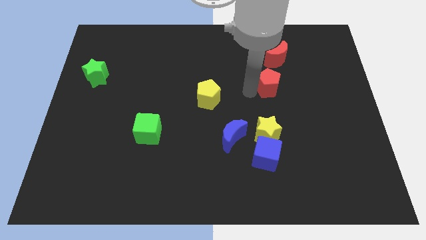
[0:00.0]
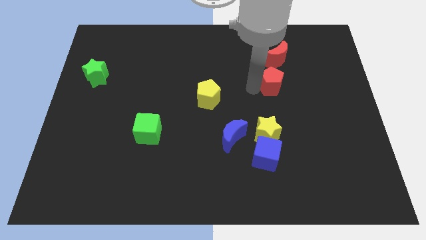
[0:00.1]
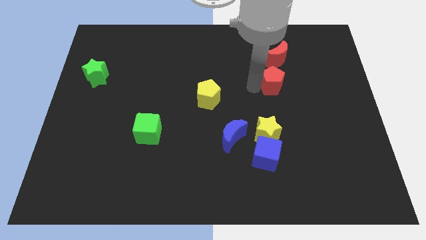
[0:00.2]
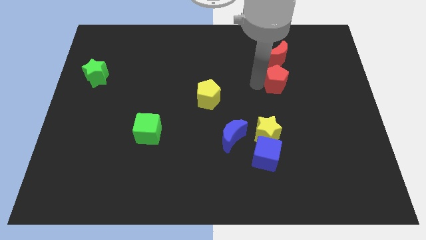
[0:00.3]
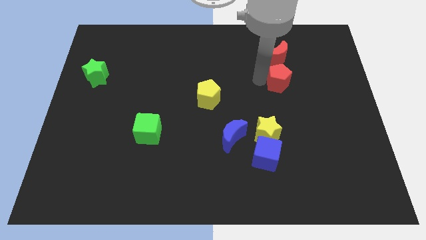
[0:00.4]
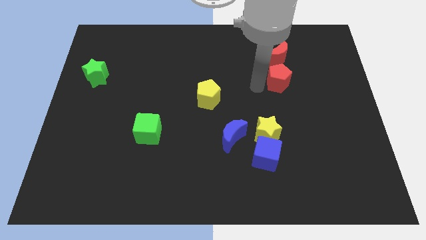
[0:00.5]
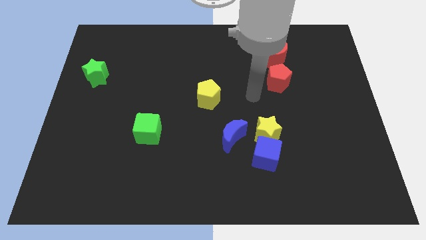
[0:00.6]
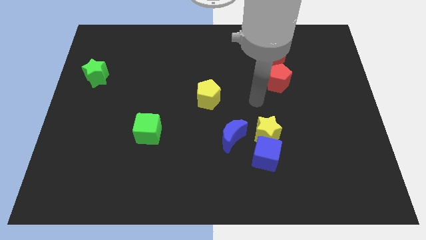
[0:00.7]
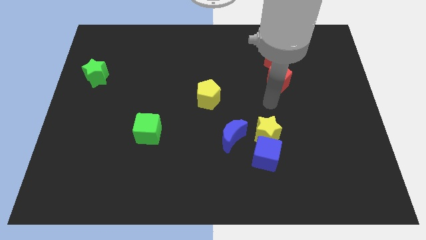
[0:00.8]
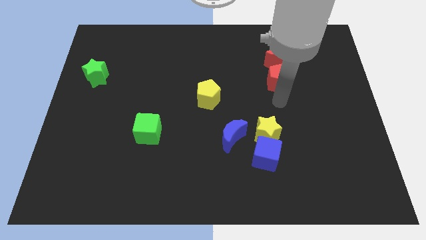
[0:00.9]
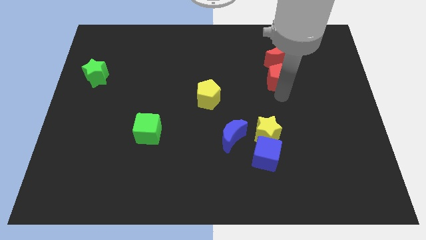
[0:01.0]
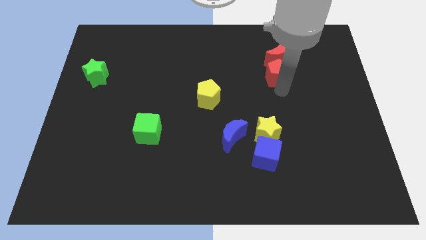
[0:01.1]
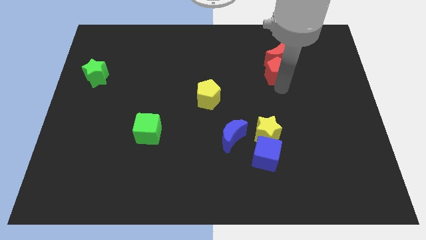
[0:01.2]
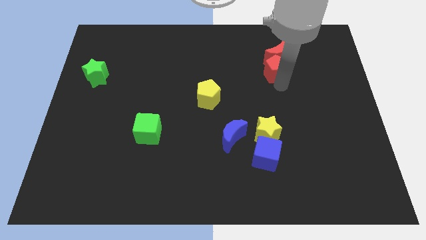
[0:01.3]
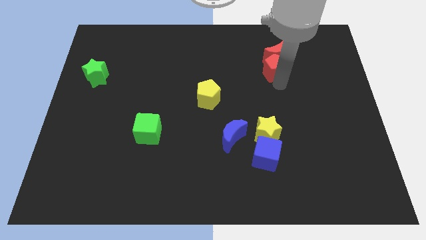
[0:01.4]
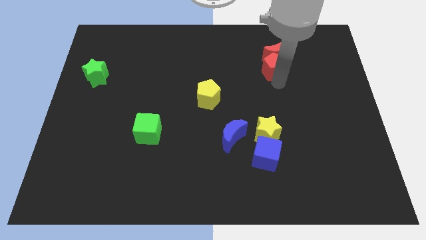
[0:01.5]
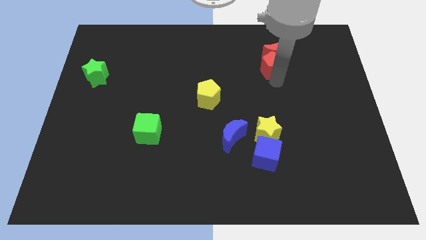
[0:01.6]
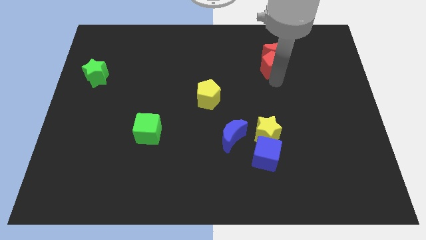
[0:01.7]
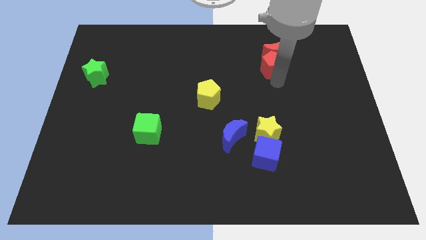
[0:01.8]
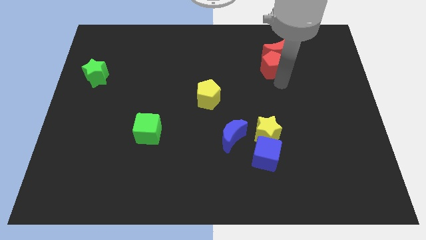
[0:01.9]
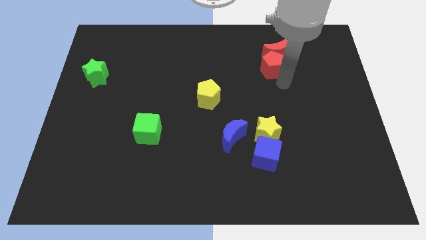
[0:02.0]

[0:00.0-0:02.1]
move red pentagon into red moon

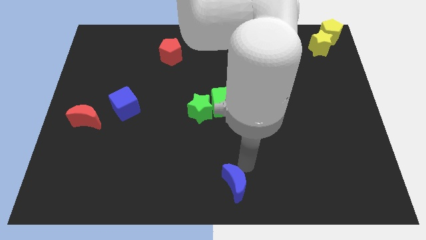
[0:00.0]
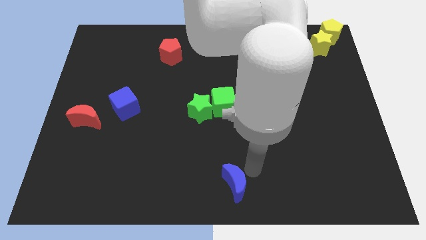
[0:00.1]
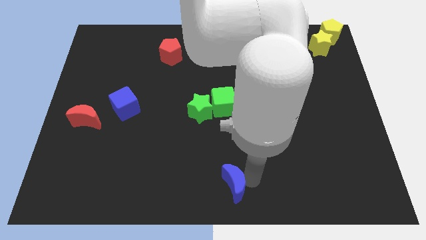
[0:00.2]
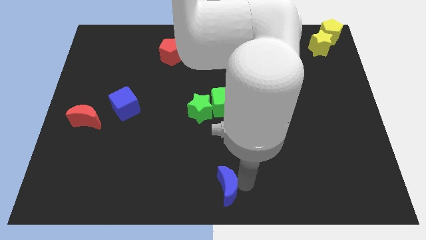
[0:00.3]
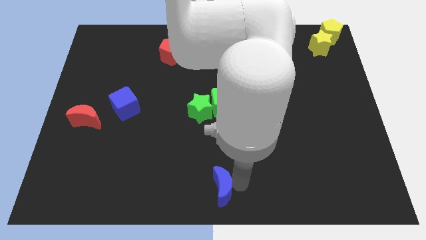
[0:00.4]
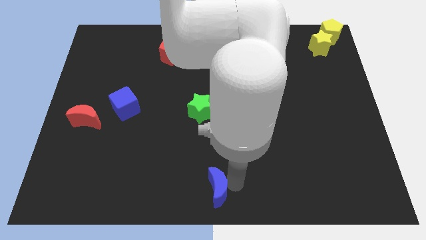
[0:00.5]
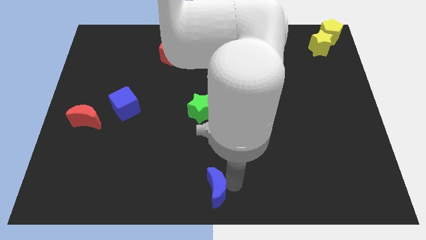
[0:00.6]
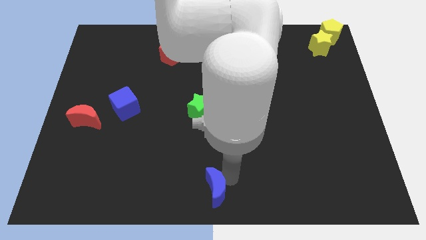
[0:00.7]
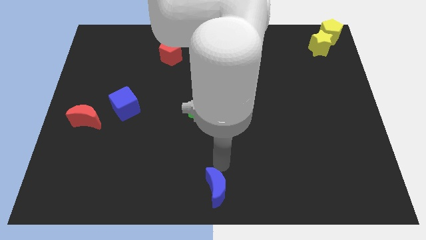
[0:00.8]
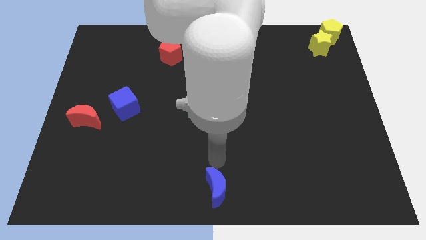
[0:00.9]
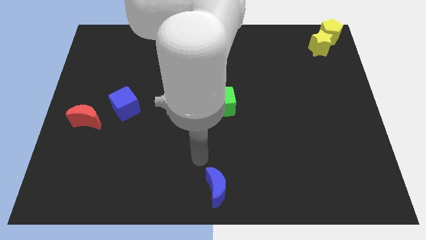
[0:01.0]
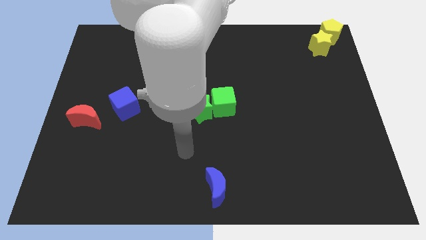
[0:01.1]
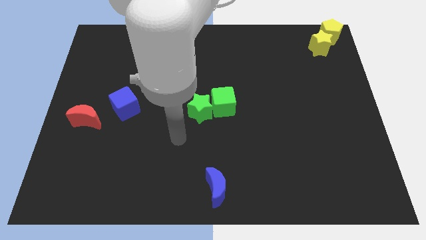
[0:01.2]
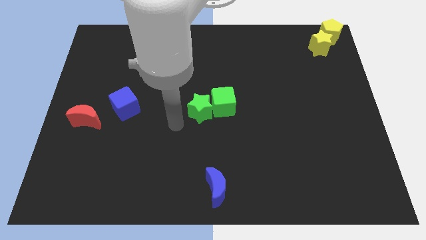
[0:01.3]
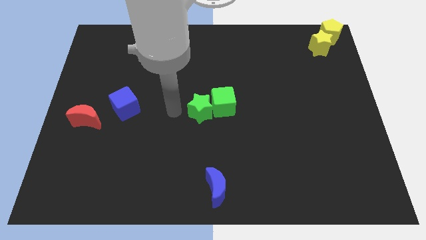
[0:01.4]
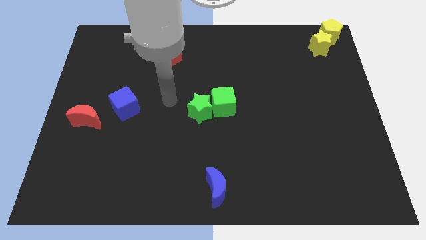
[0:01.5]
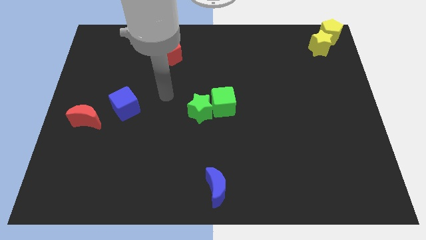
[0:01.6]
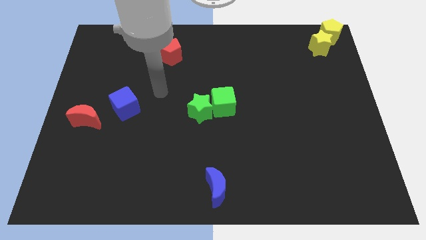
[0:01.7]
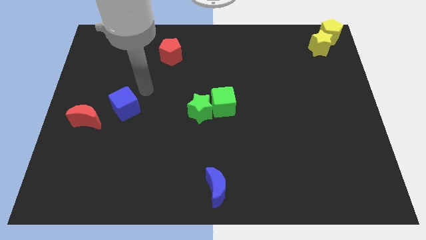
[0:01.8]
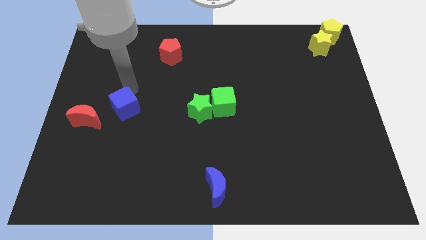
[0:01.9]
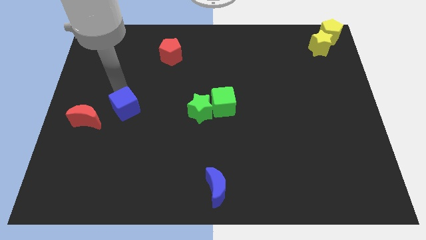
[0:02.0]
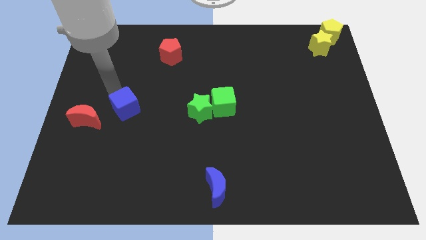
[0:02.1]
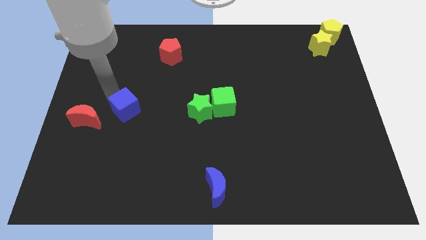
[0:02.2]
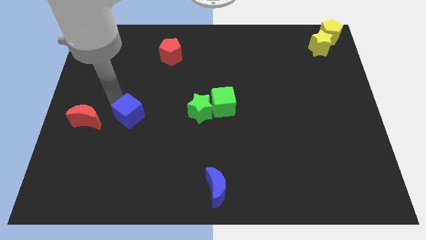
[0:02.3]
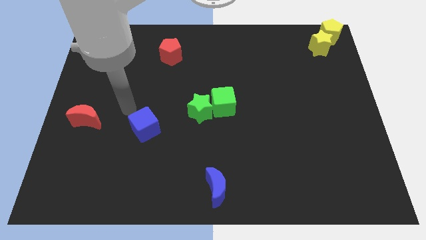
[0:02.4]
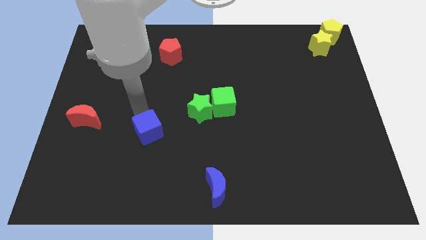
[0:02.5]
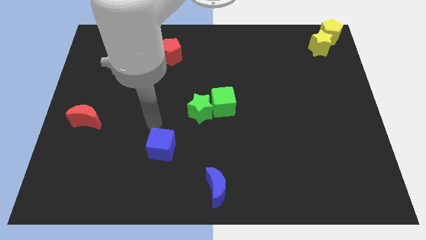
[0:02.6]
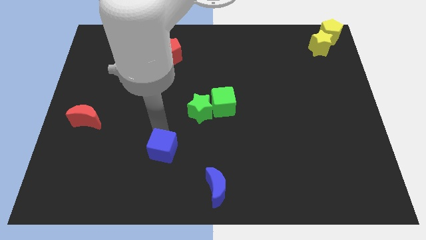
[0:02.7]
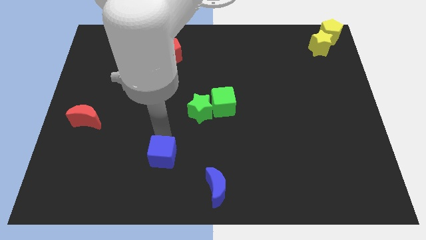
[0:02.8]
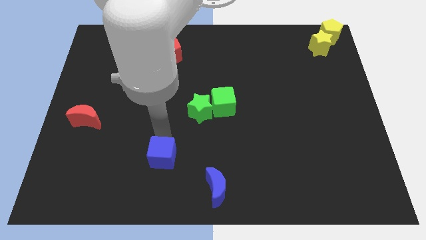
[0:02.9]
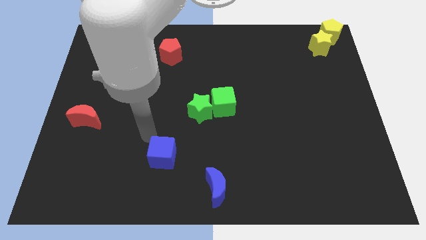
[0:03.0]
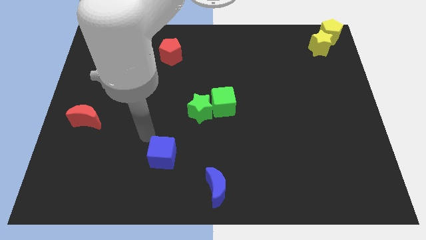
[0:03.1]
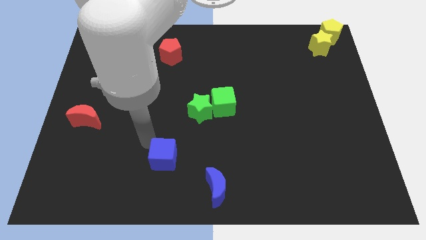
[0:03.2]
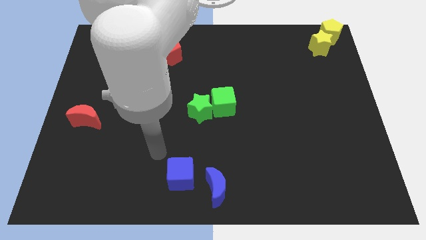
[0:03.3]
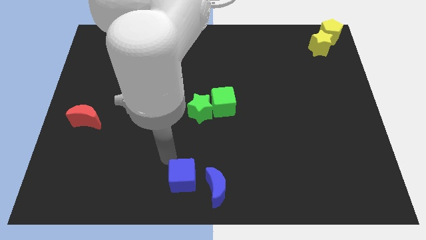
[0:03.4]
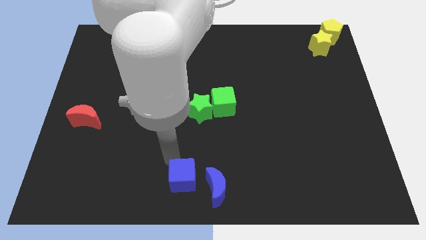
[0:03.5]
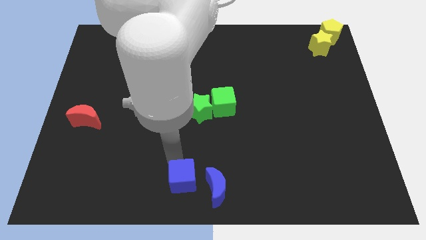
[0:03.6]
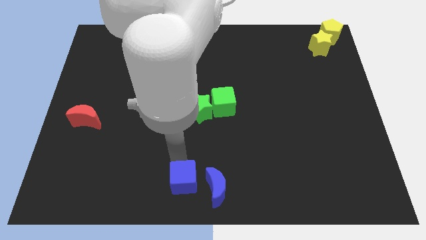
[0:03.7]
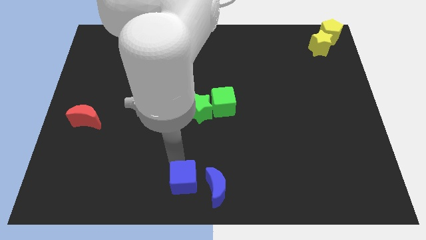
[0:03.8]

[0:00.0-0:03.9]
drag the blue cube diagonally to the bottom left of the green cube

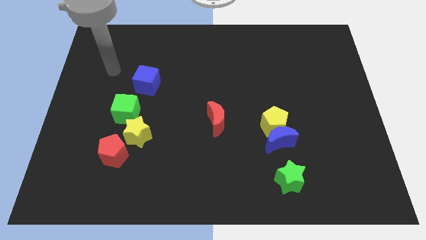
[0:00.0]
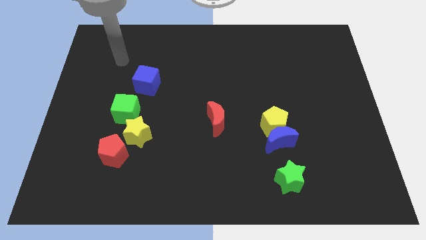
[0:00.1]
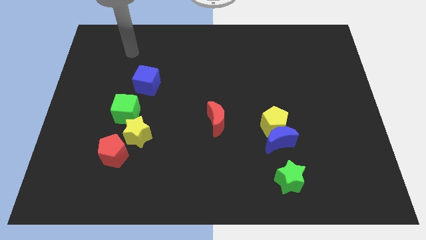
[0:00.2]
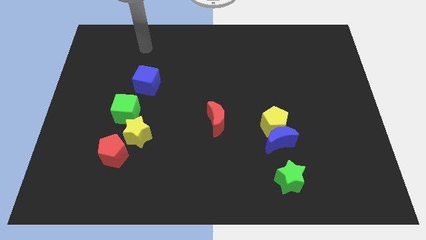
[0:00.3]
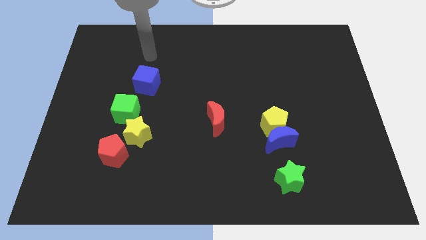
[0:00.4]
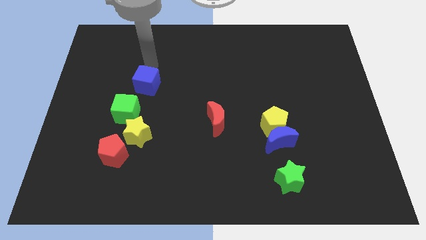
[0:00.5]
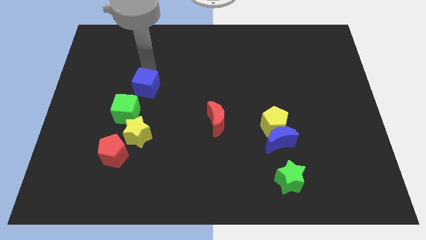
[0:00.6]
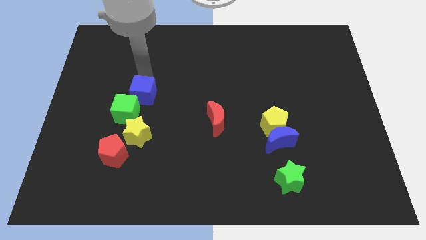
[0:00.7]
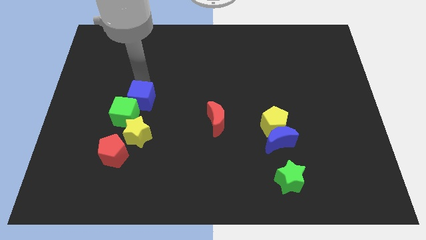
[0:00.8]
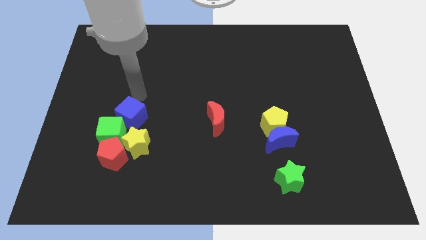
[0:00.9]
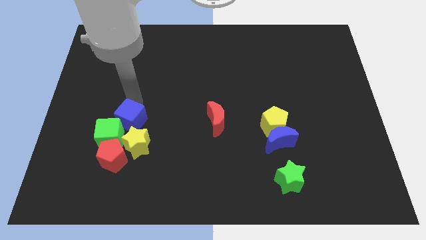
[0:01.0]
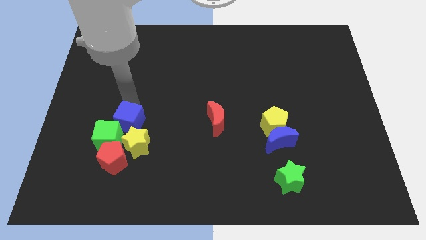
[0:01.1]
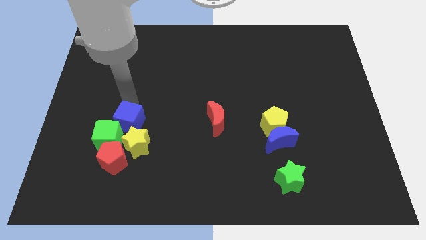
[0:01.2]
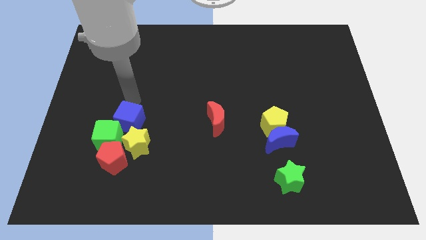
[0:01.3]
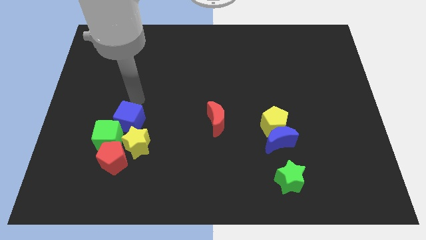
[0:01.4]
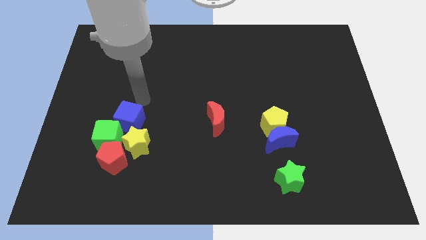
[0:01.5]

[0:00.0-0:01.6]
slide the blue cube into the green cube

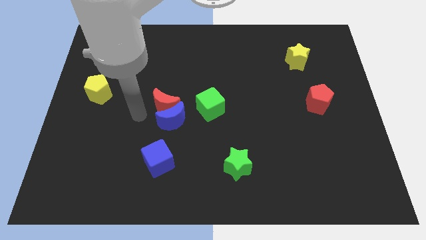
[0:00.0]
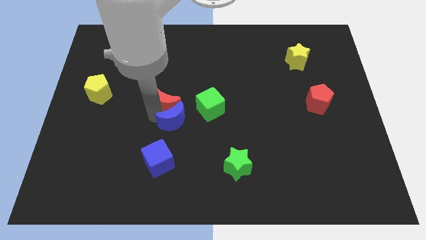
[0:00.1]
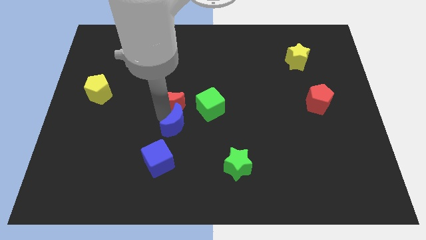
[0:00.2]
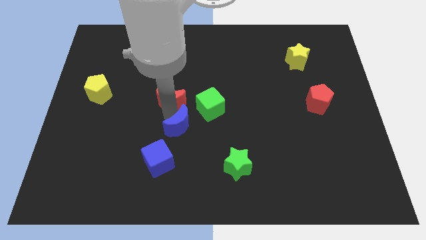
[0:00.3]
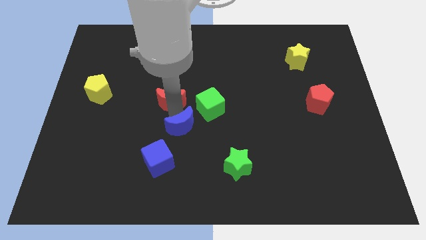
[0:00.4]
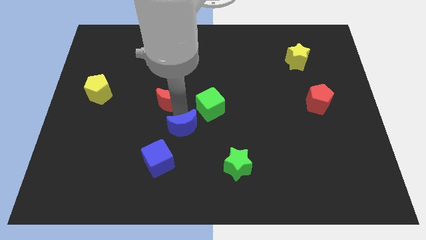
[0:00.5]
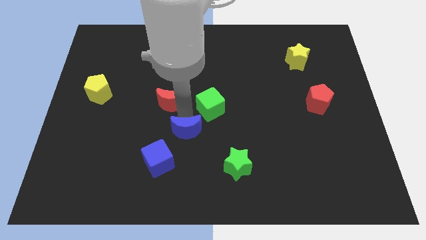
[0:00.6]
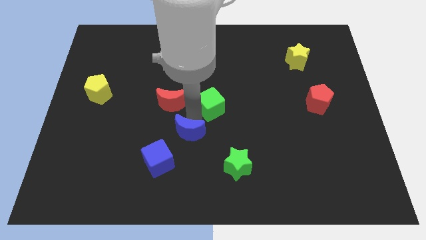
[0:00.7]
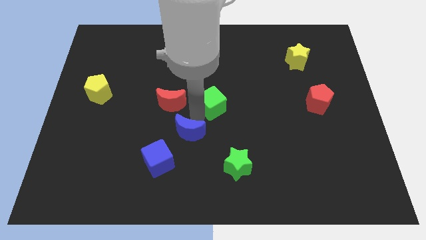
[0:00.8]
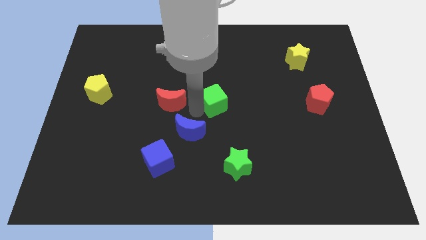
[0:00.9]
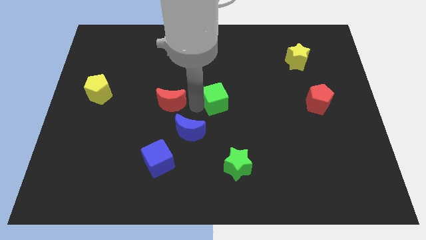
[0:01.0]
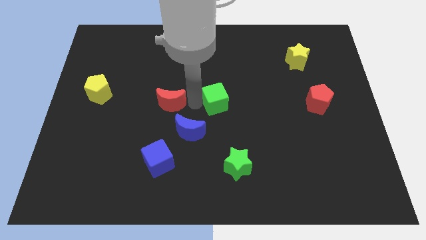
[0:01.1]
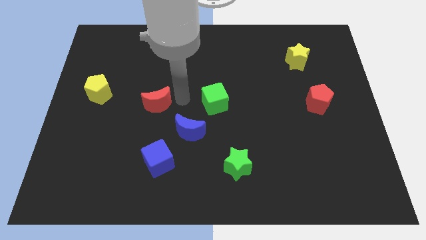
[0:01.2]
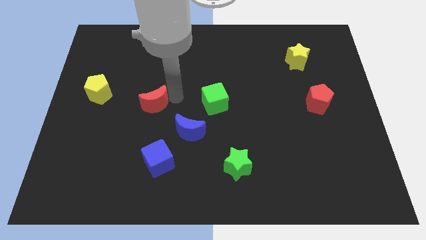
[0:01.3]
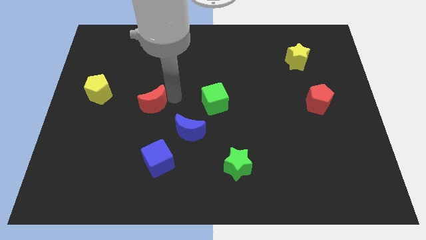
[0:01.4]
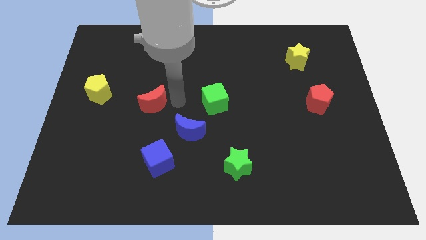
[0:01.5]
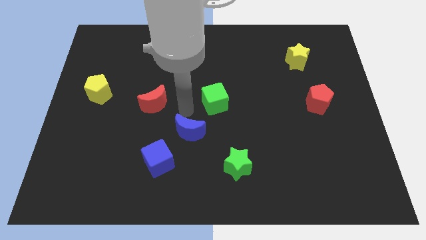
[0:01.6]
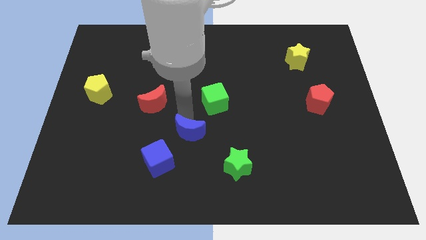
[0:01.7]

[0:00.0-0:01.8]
apart red and blue crescent from each othar
